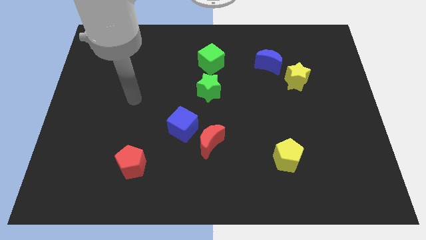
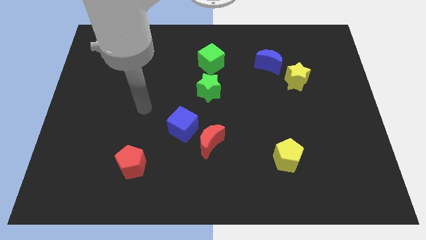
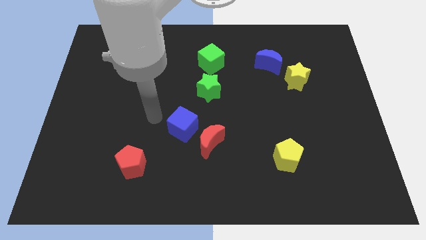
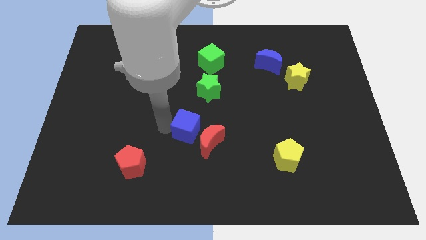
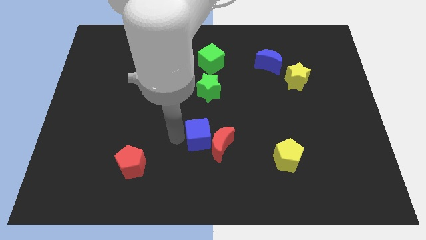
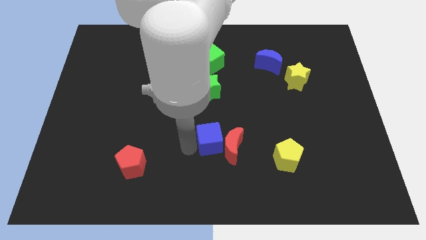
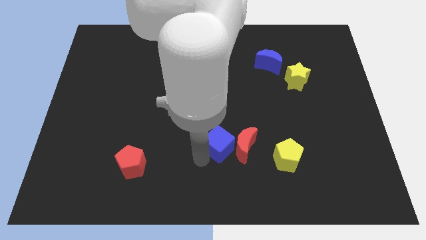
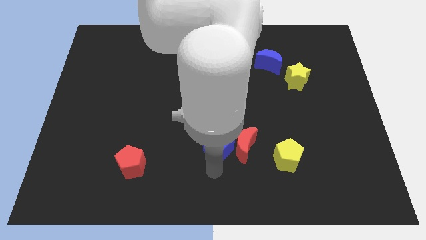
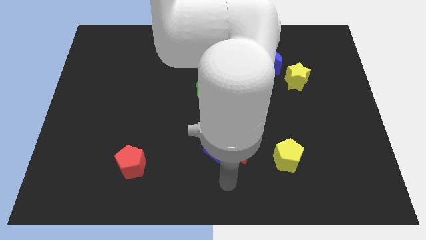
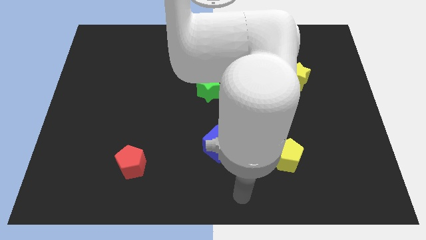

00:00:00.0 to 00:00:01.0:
push the blue cube into the red moon

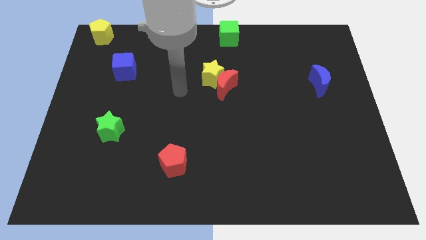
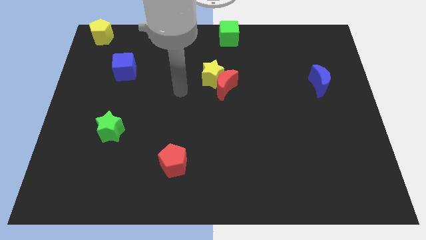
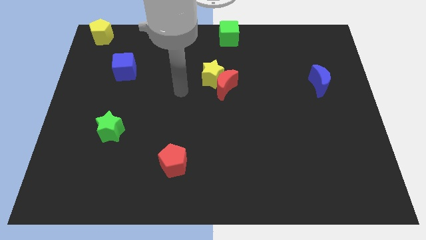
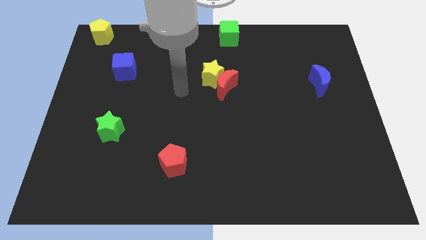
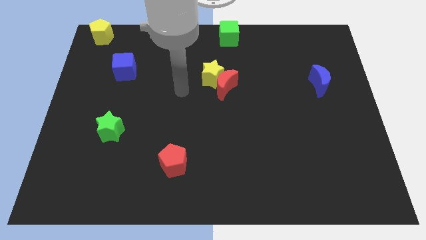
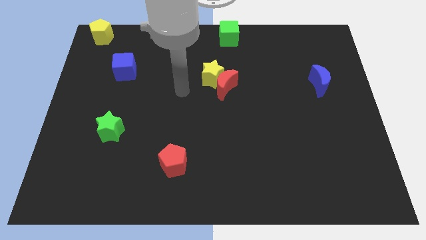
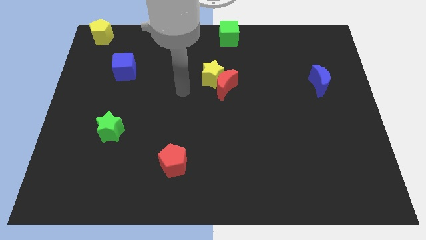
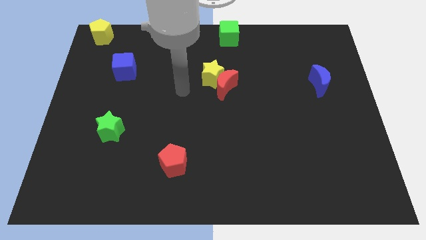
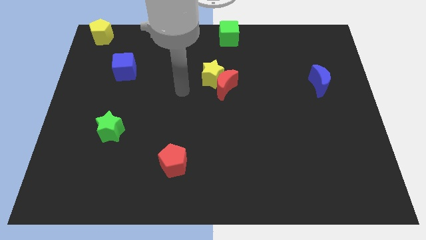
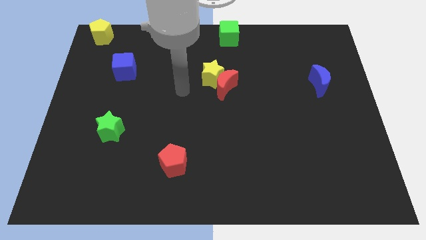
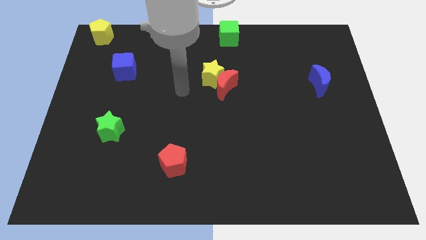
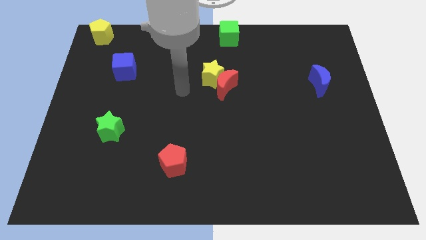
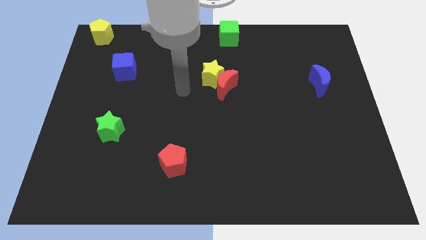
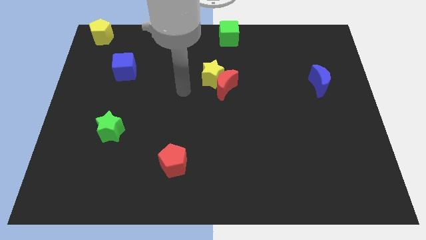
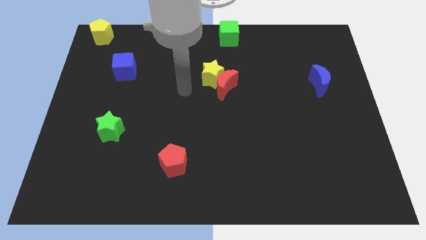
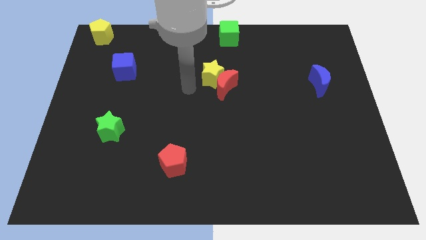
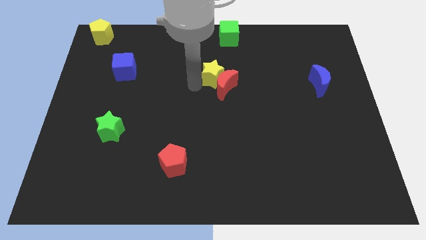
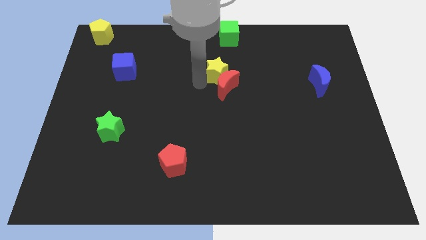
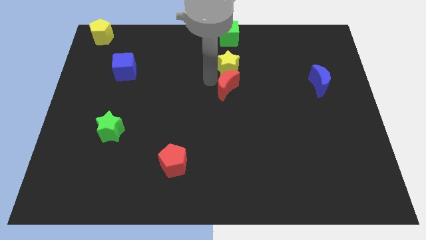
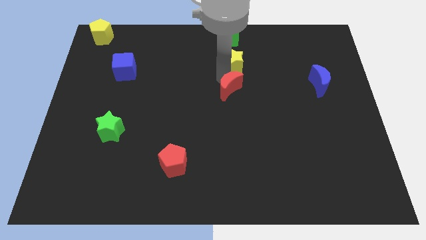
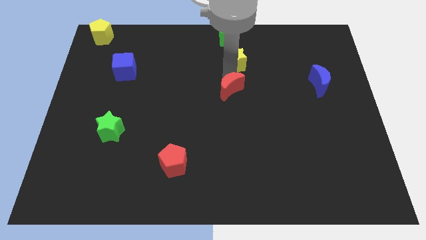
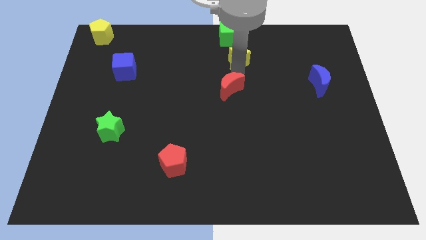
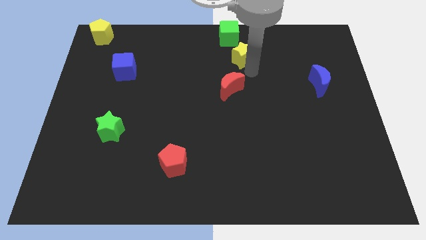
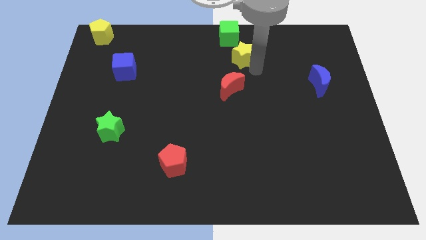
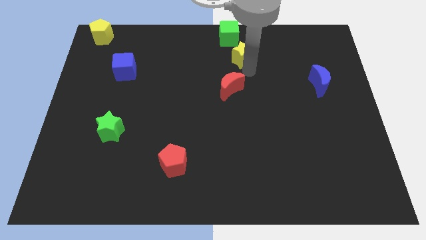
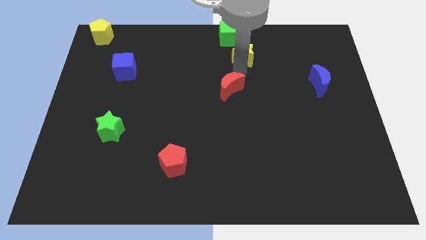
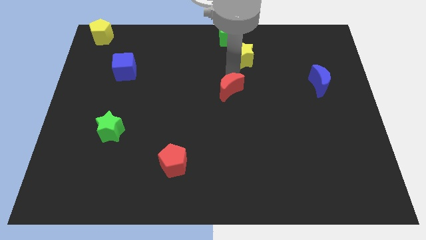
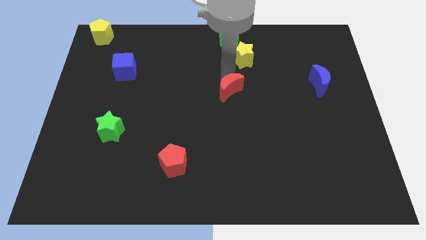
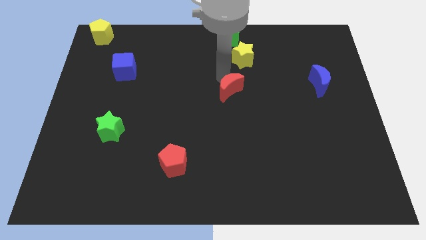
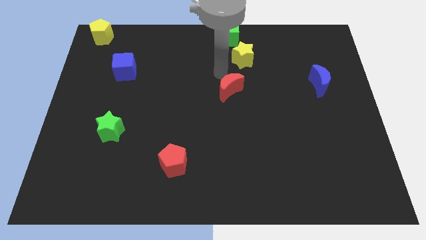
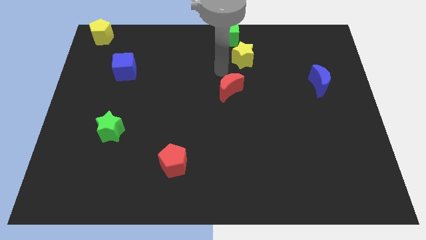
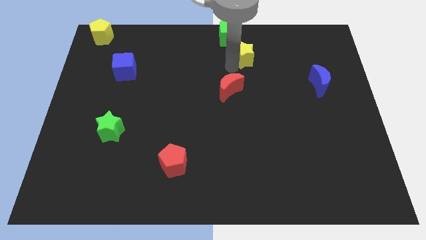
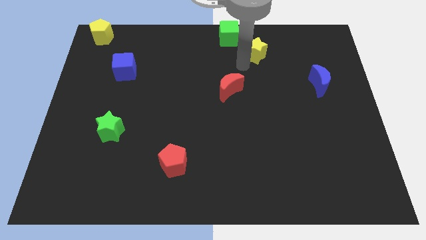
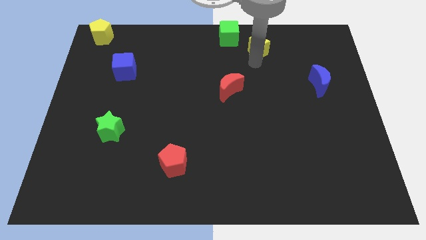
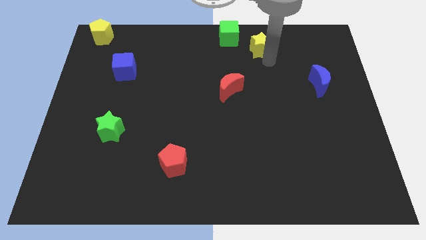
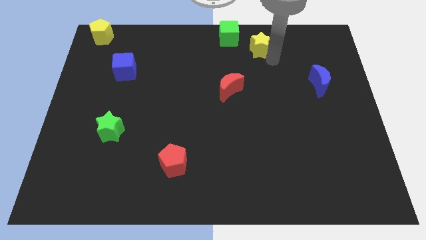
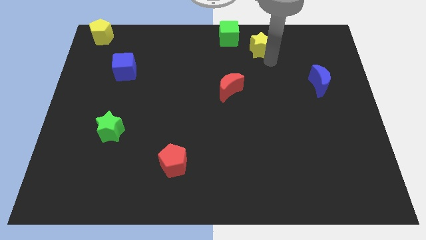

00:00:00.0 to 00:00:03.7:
push the yellow star to the bottom right side of the green cube

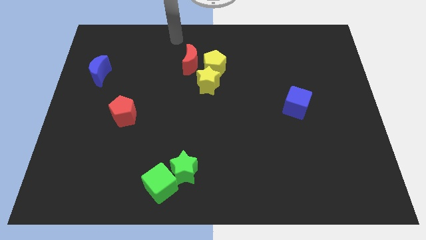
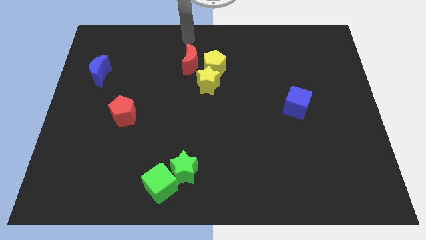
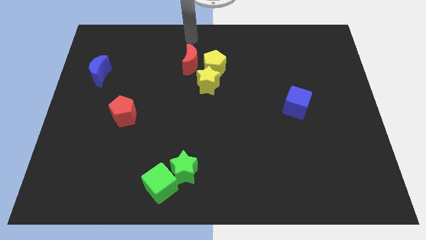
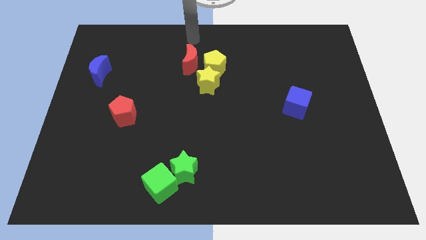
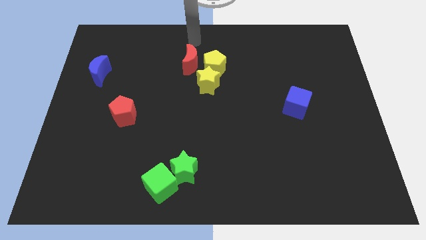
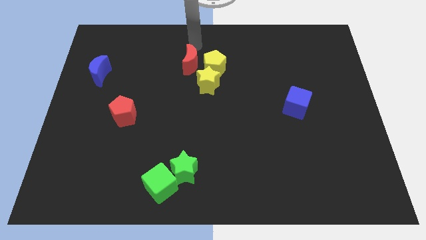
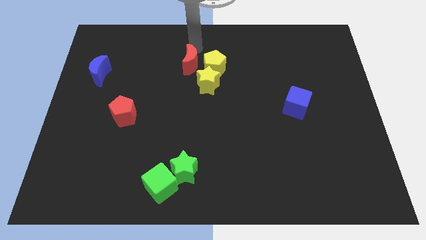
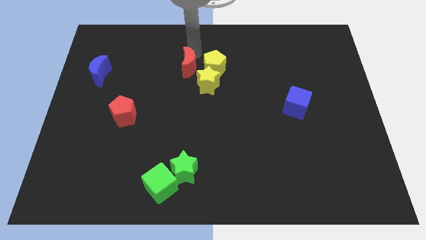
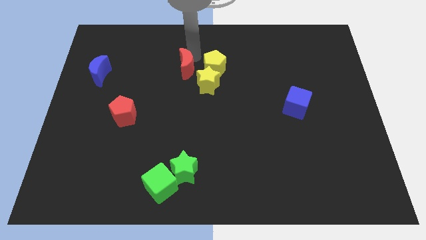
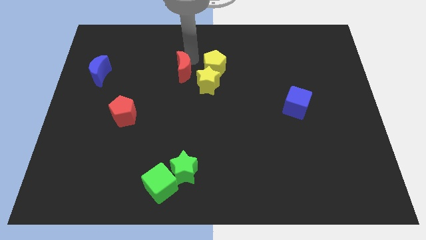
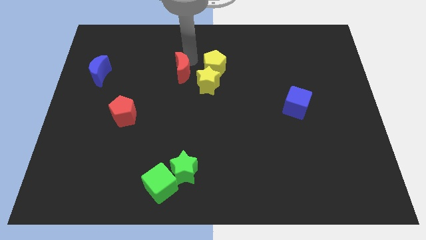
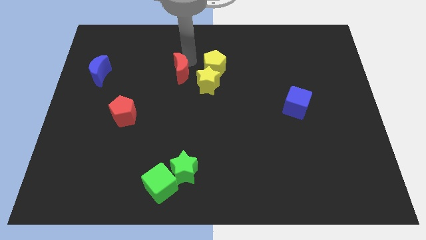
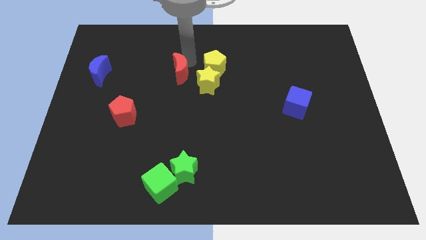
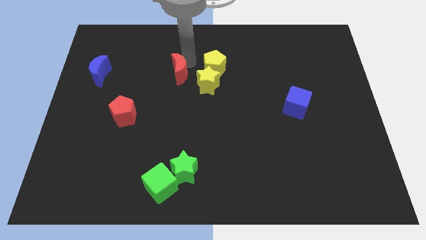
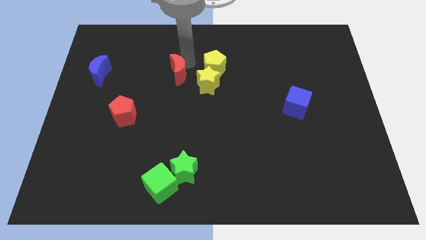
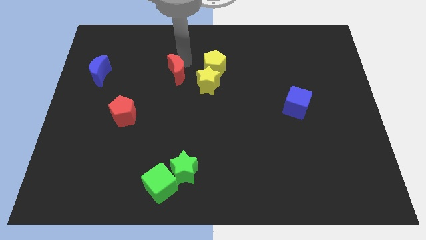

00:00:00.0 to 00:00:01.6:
place the red moon above the yellow star

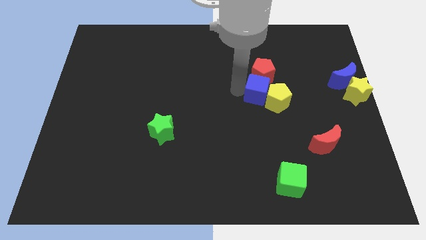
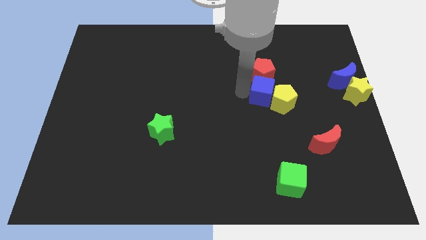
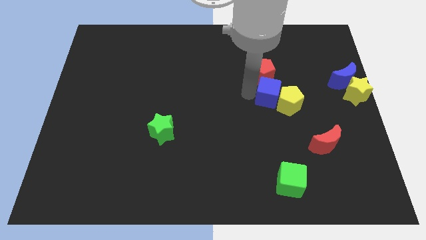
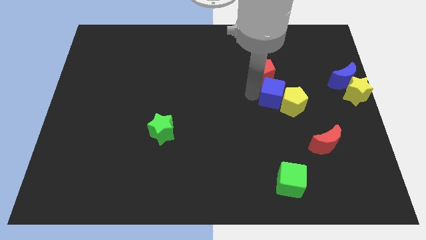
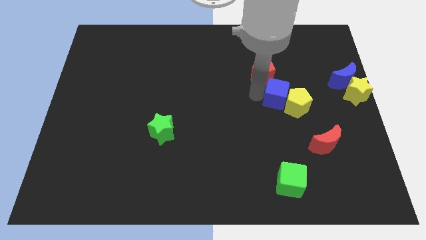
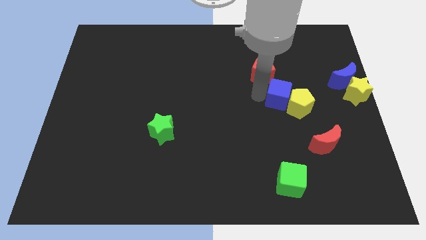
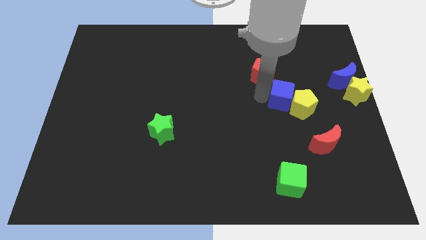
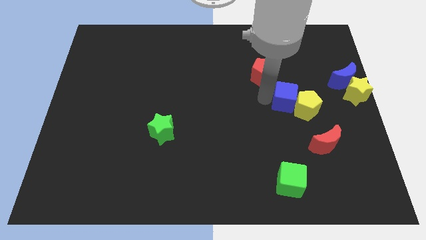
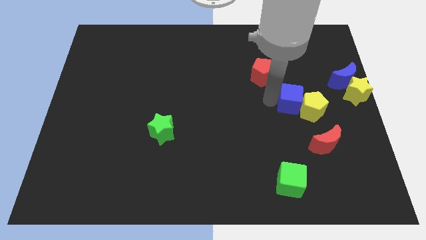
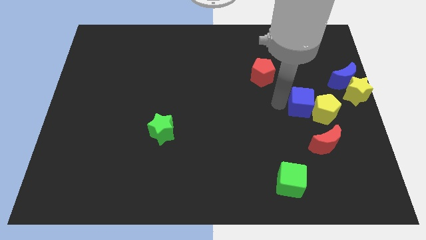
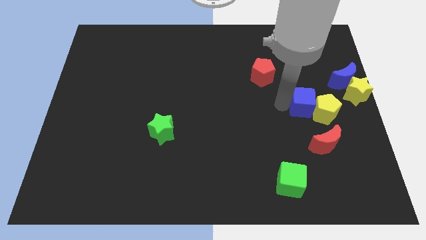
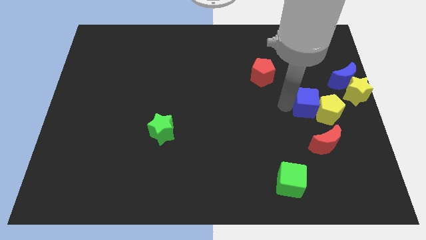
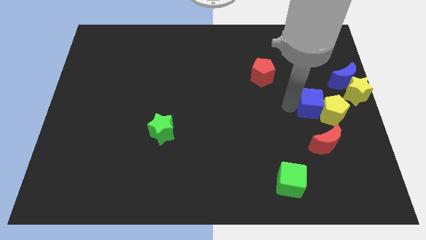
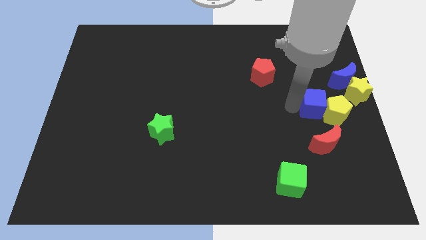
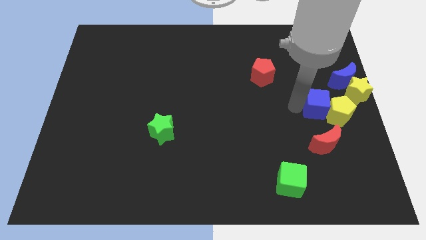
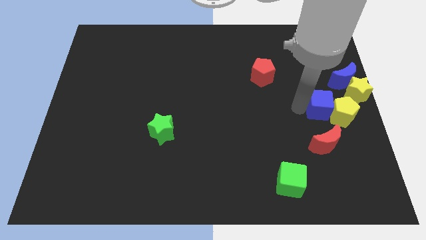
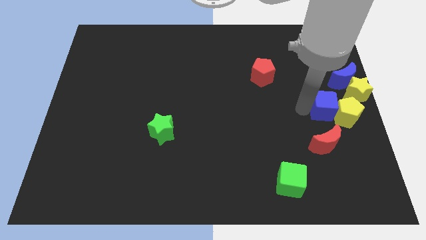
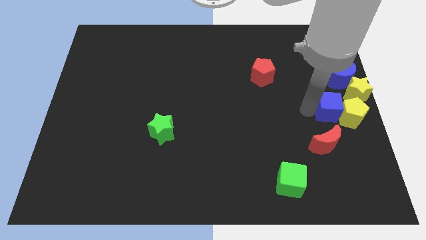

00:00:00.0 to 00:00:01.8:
push the yellow pentagon and blue cube to the right center

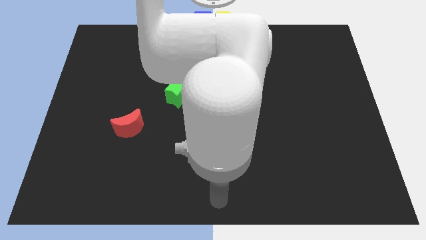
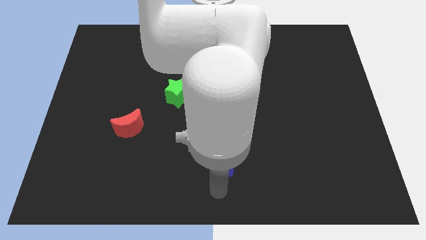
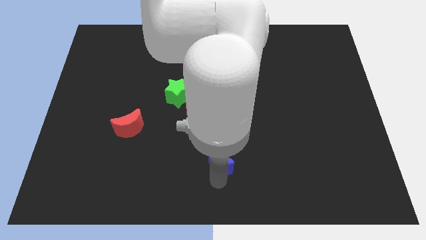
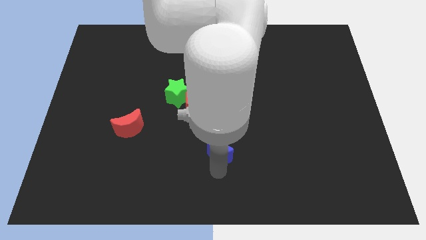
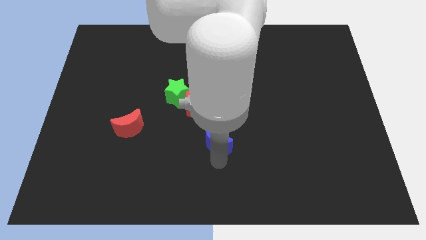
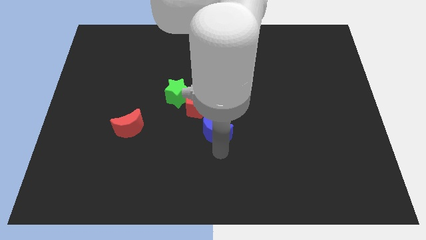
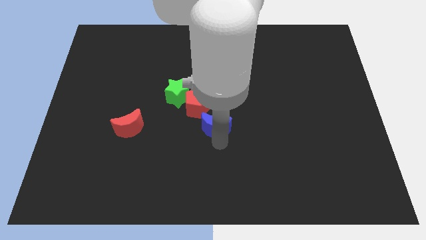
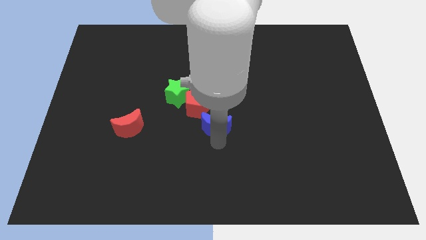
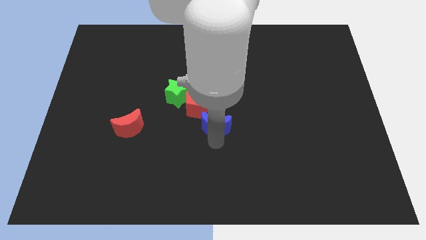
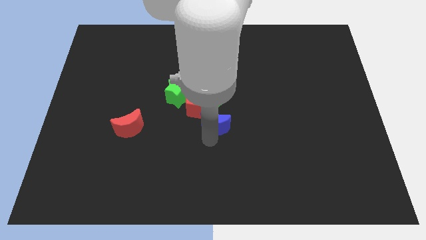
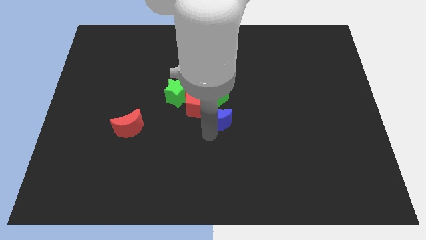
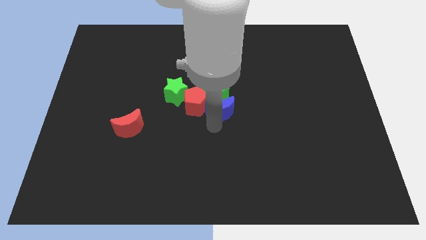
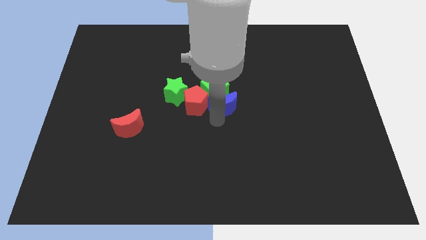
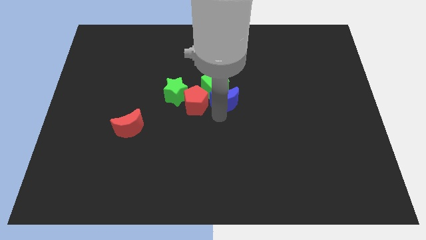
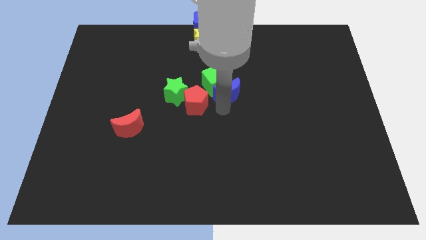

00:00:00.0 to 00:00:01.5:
place the blue moon into the green cube
